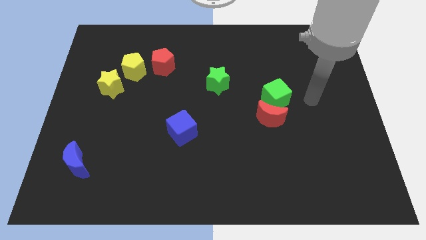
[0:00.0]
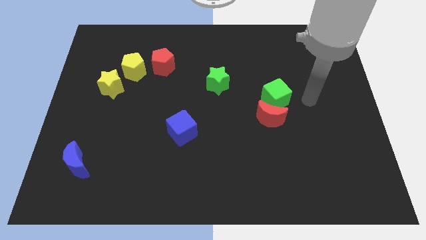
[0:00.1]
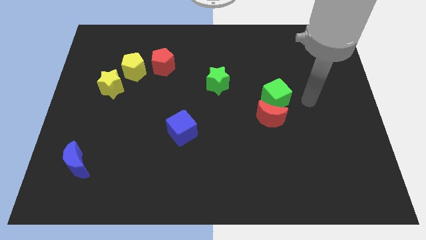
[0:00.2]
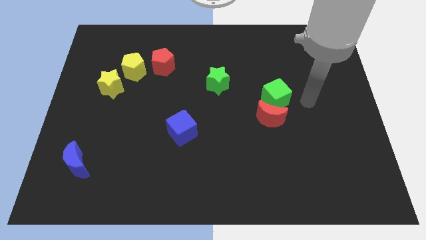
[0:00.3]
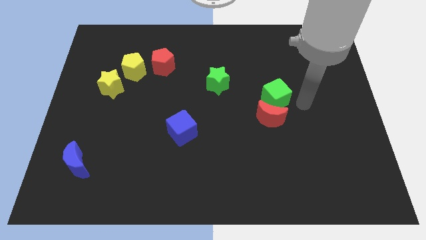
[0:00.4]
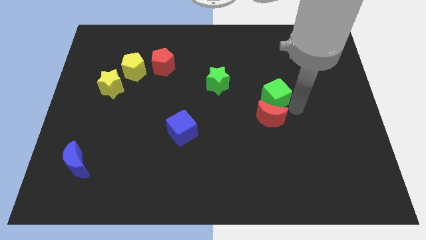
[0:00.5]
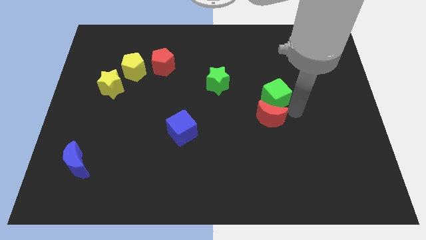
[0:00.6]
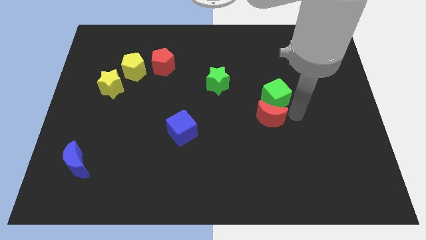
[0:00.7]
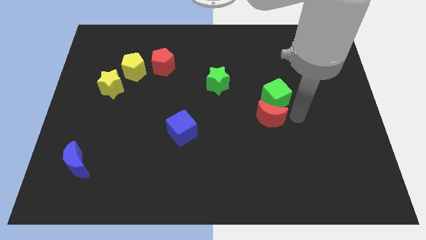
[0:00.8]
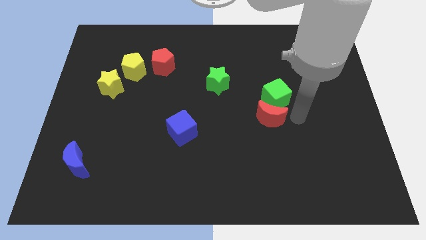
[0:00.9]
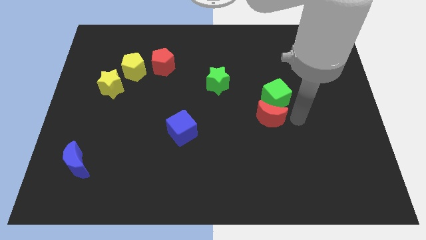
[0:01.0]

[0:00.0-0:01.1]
place your arm towards the red moon

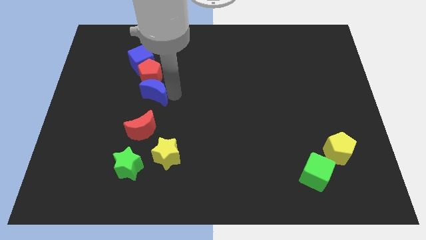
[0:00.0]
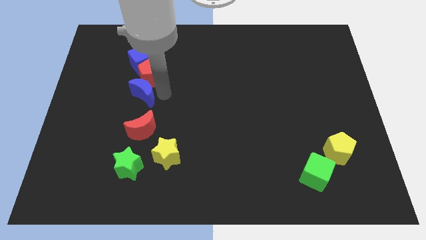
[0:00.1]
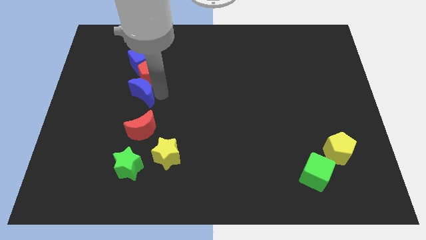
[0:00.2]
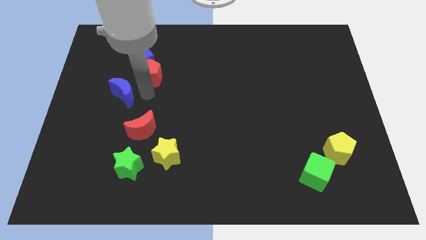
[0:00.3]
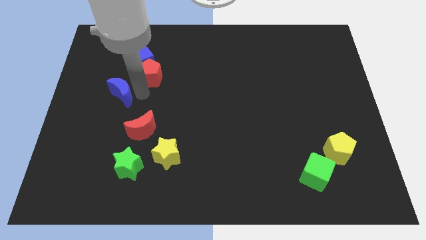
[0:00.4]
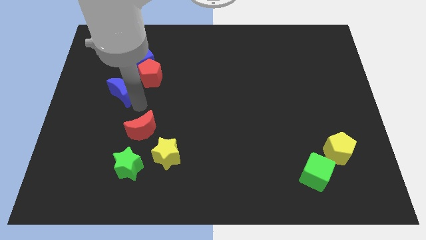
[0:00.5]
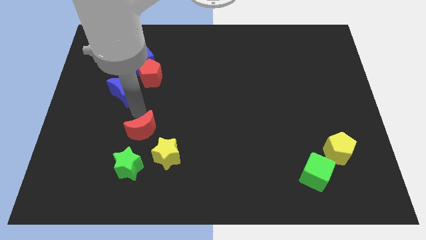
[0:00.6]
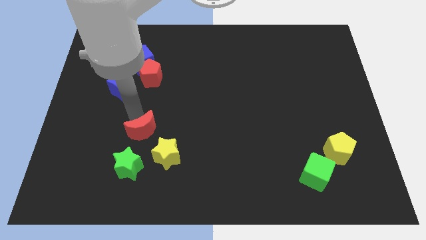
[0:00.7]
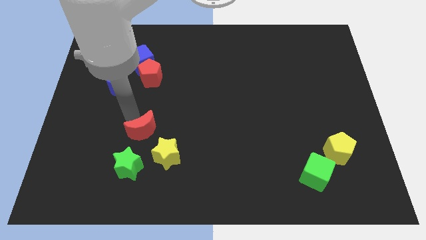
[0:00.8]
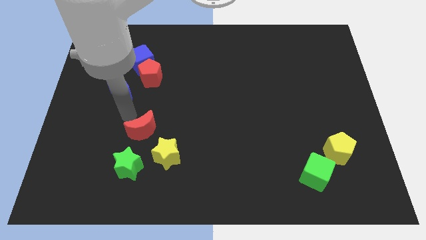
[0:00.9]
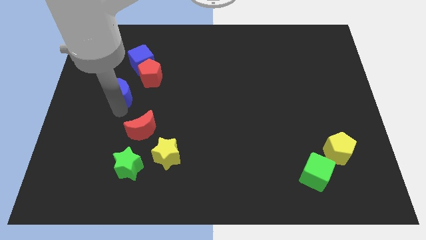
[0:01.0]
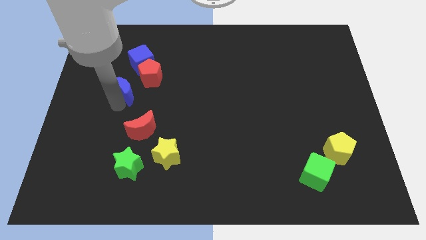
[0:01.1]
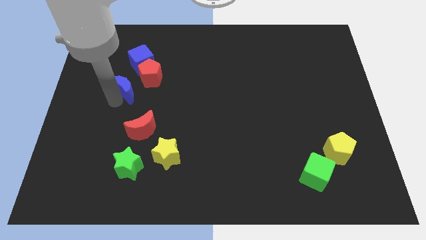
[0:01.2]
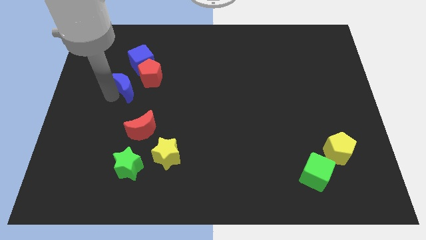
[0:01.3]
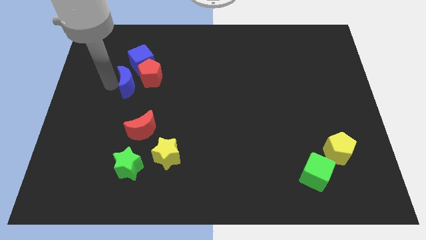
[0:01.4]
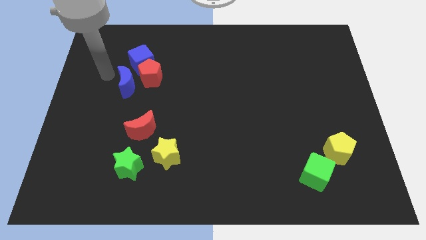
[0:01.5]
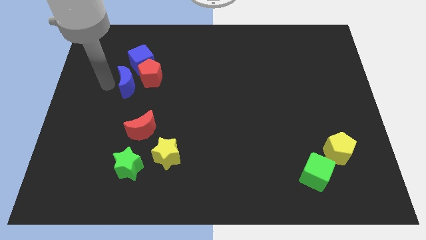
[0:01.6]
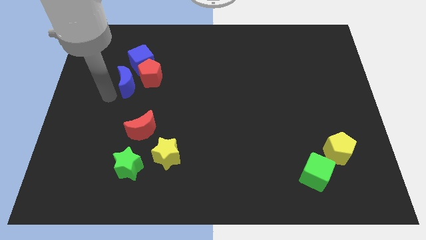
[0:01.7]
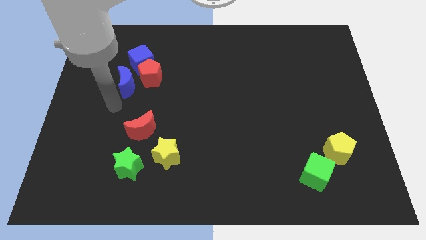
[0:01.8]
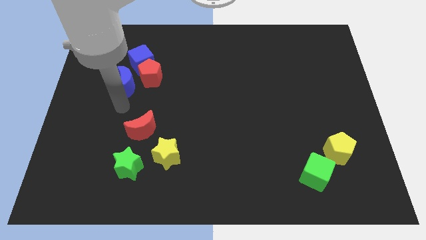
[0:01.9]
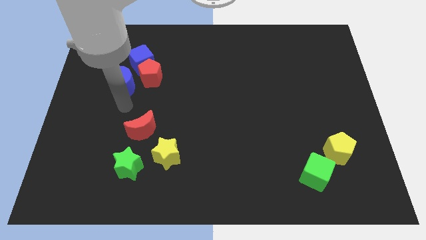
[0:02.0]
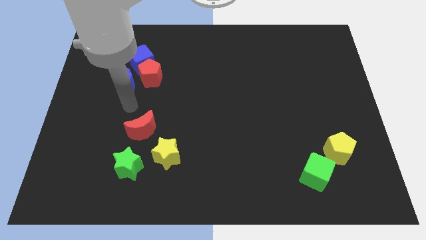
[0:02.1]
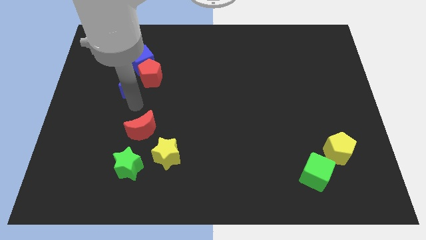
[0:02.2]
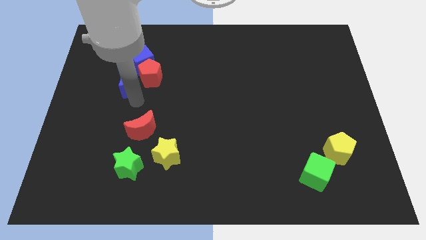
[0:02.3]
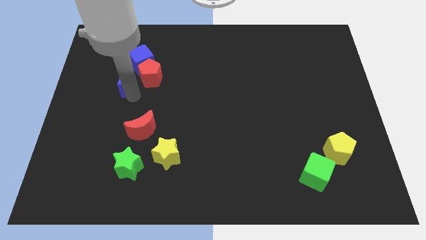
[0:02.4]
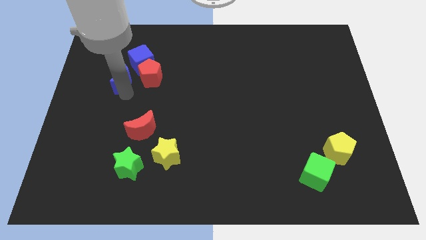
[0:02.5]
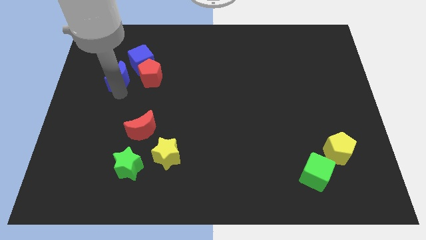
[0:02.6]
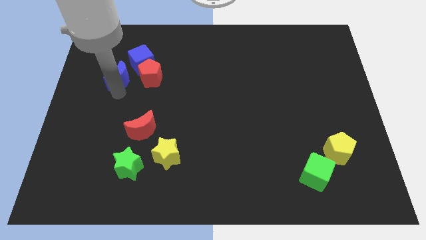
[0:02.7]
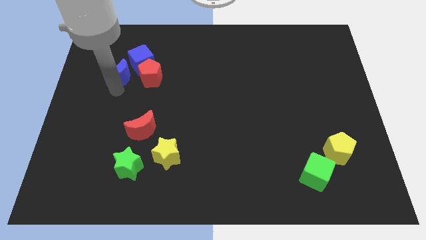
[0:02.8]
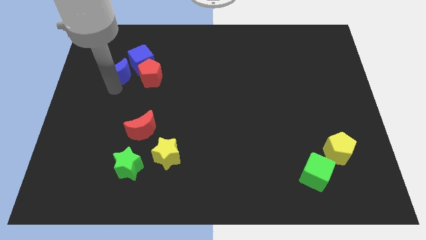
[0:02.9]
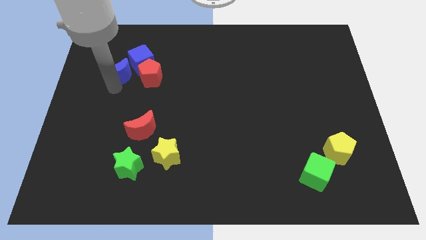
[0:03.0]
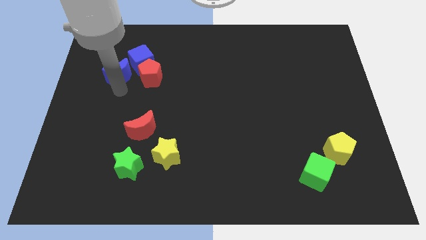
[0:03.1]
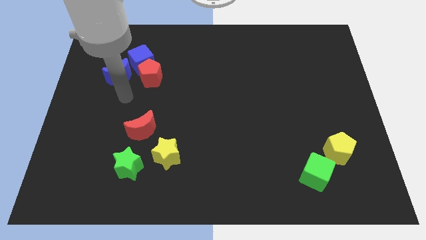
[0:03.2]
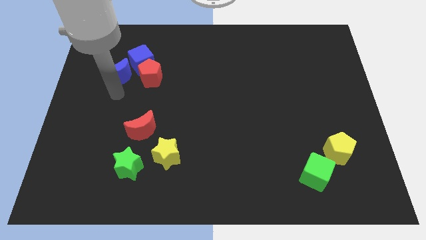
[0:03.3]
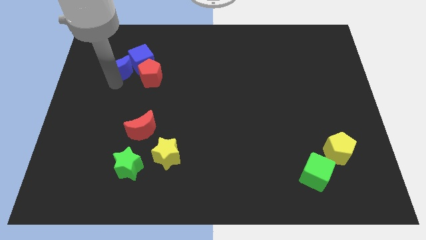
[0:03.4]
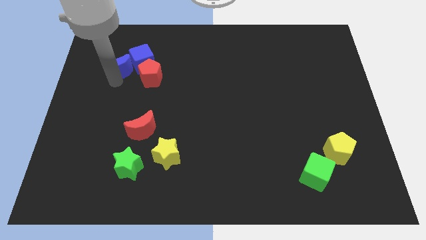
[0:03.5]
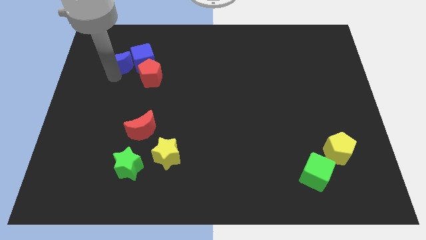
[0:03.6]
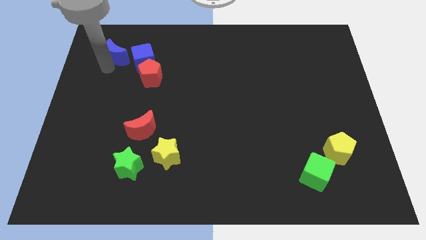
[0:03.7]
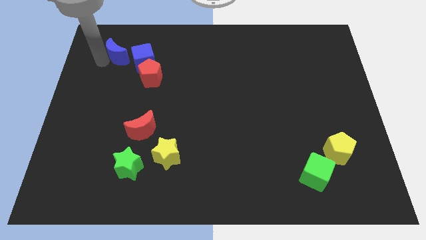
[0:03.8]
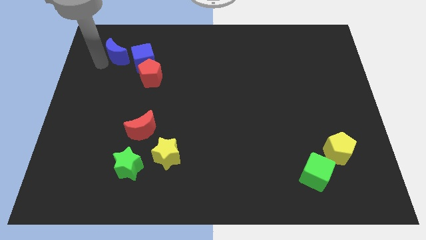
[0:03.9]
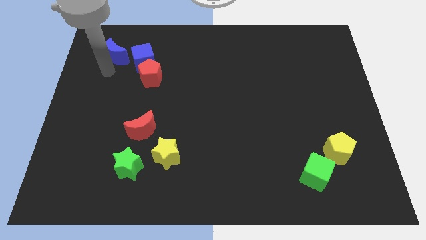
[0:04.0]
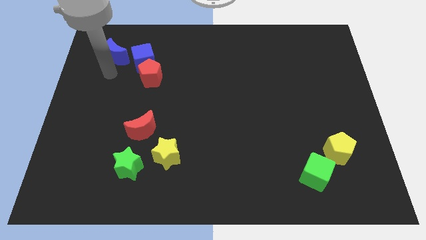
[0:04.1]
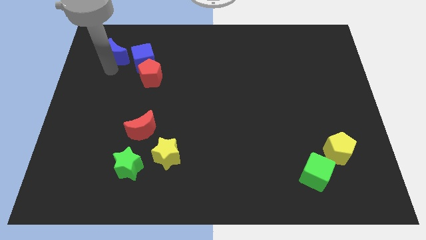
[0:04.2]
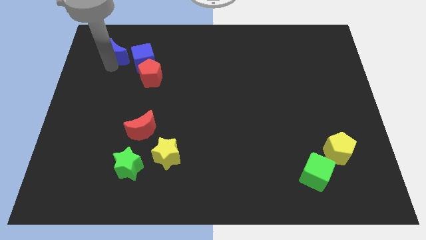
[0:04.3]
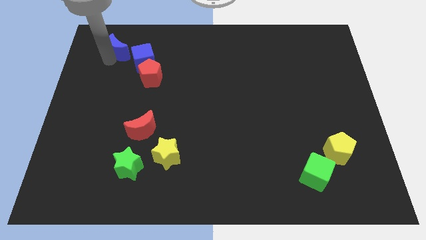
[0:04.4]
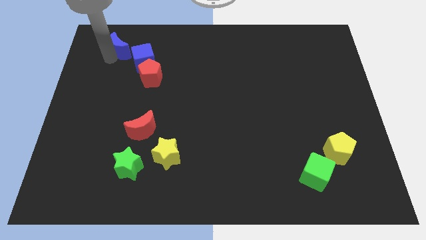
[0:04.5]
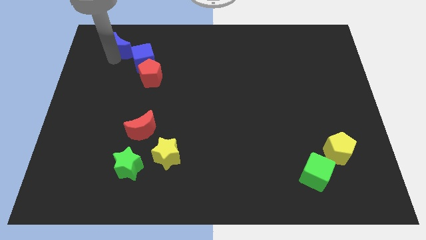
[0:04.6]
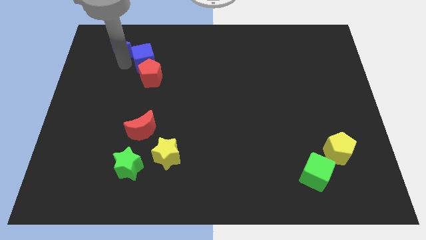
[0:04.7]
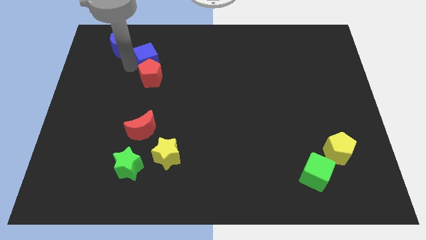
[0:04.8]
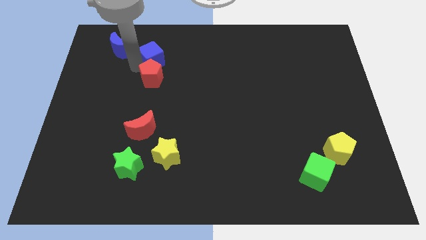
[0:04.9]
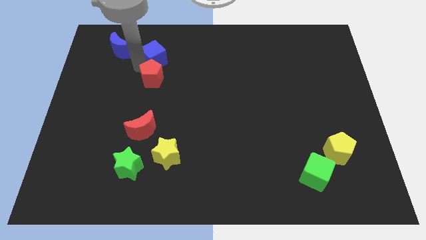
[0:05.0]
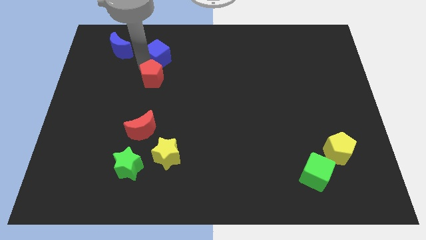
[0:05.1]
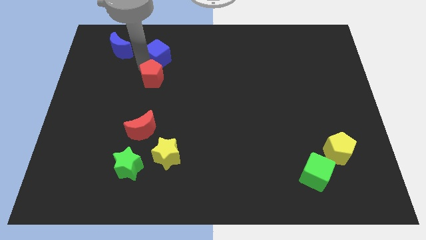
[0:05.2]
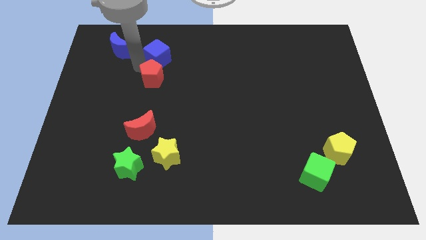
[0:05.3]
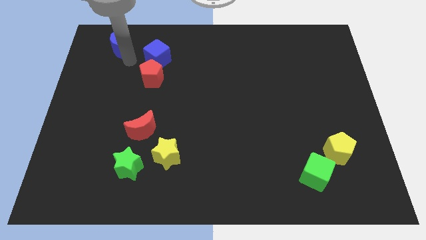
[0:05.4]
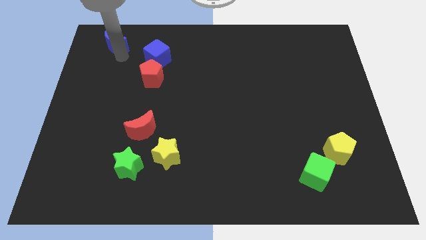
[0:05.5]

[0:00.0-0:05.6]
move the blue crescent left to the blue cube

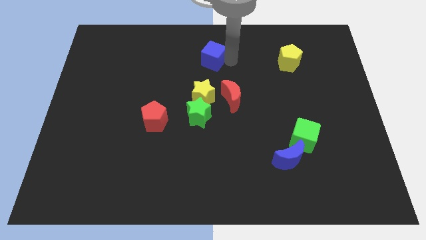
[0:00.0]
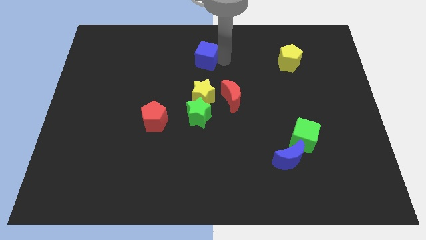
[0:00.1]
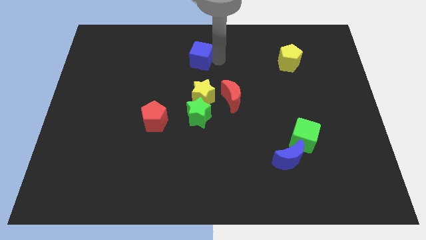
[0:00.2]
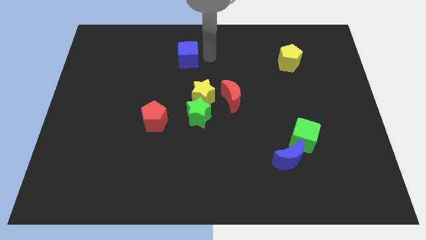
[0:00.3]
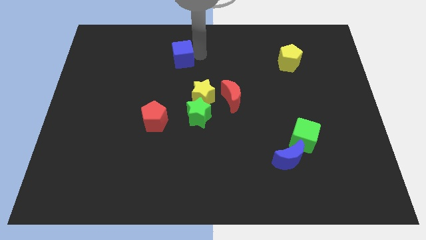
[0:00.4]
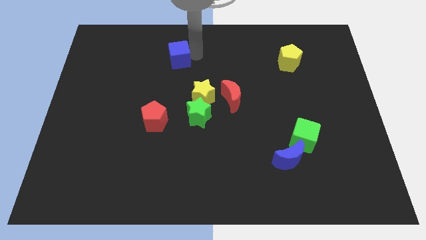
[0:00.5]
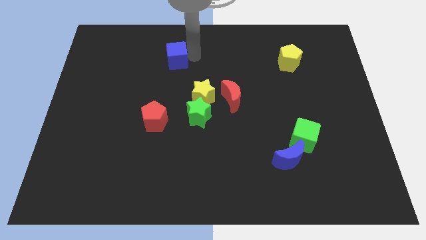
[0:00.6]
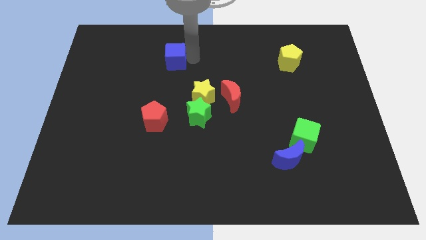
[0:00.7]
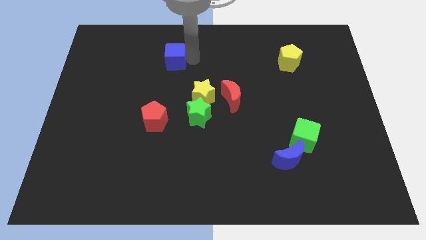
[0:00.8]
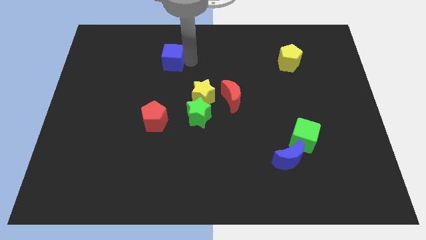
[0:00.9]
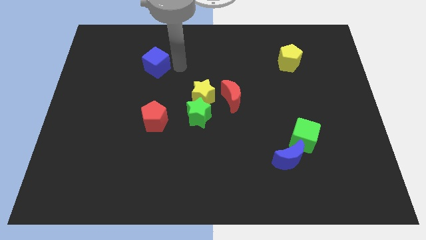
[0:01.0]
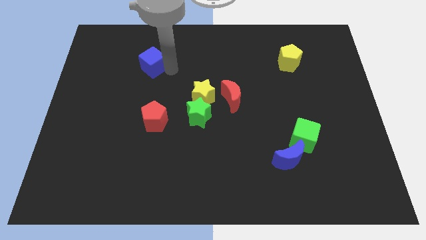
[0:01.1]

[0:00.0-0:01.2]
move blue cube vertically above red pentagon

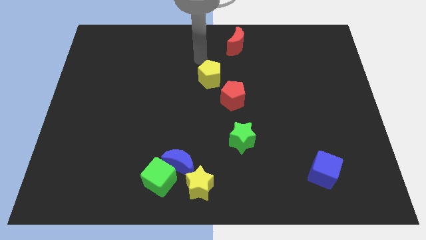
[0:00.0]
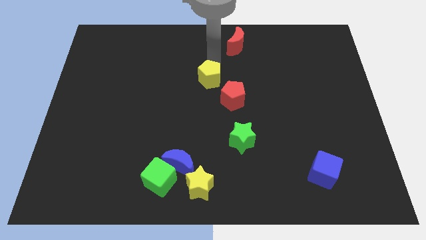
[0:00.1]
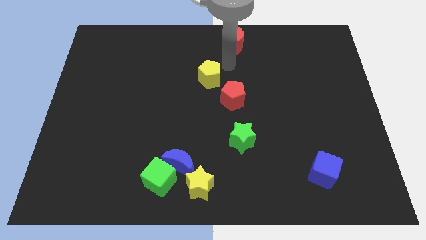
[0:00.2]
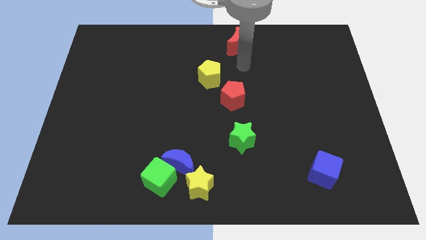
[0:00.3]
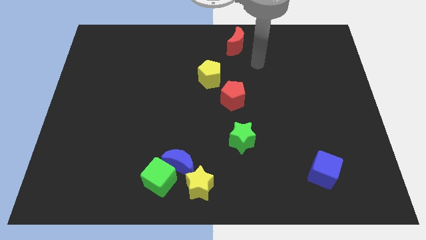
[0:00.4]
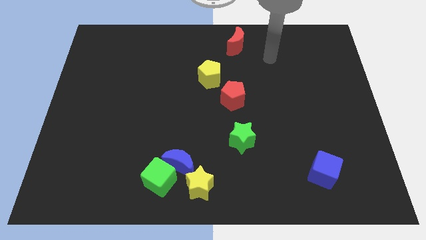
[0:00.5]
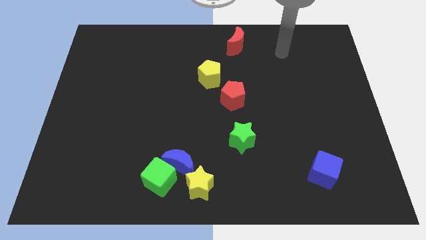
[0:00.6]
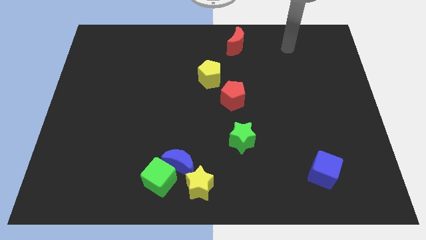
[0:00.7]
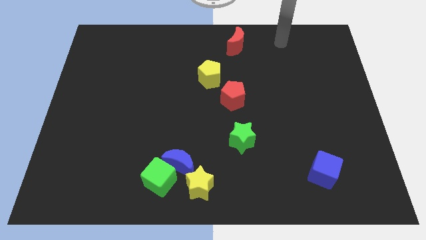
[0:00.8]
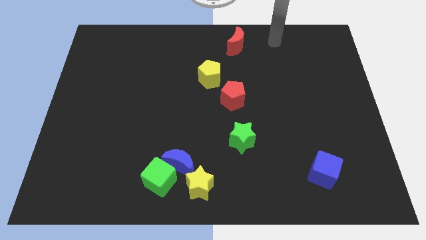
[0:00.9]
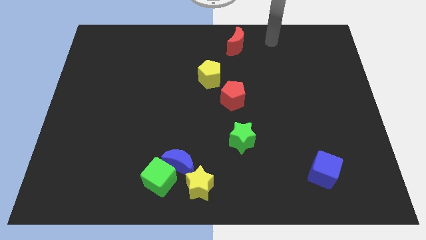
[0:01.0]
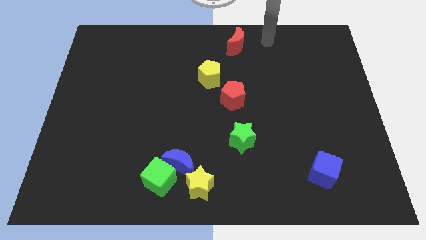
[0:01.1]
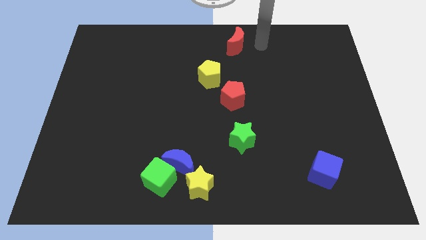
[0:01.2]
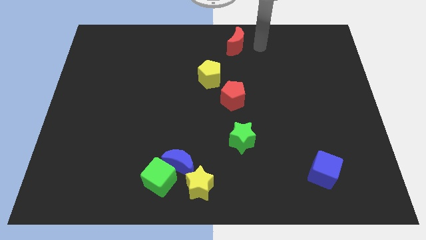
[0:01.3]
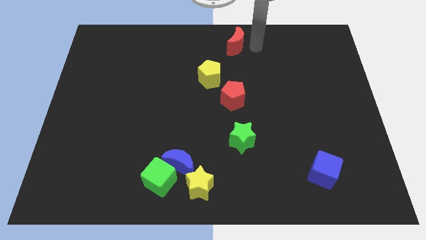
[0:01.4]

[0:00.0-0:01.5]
point your arm at the right of the red crescent
